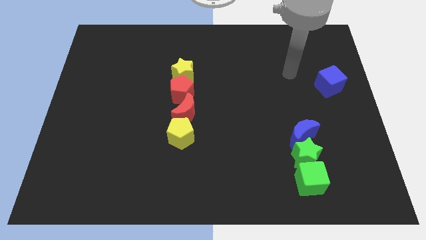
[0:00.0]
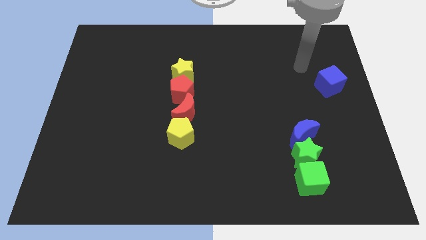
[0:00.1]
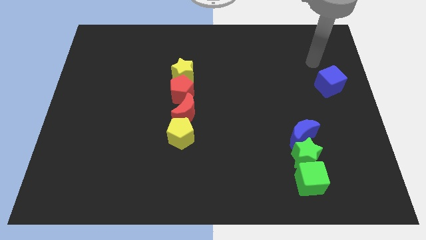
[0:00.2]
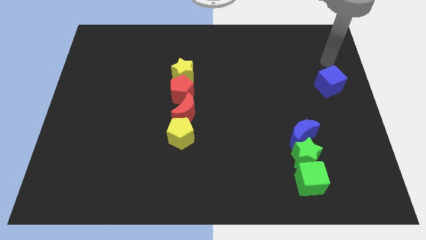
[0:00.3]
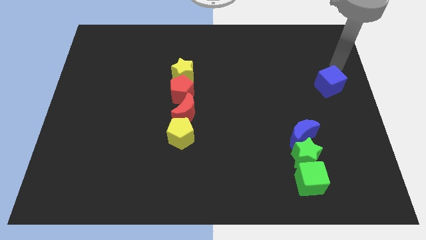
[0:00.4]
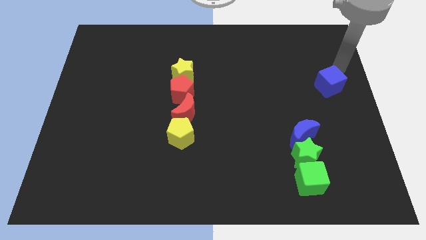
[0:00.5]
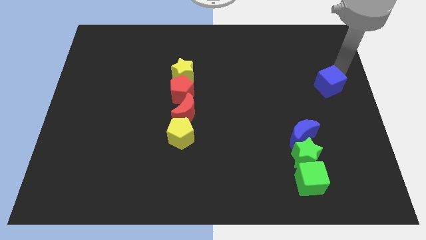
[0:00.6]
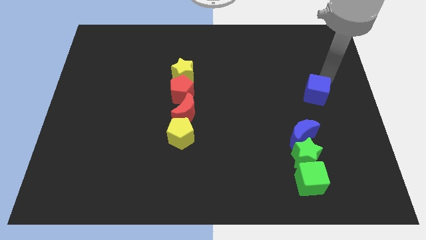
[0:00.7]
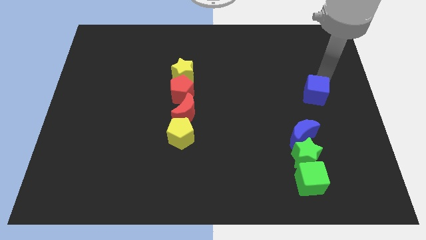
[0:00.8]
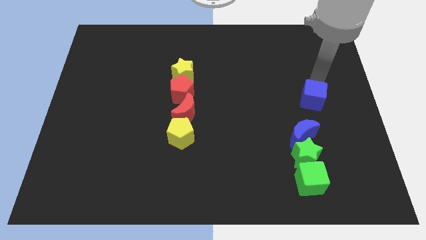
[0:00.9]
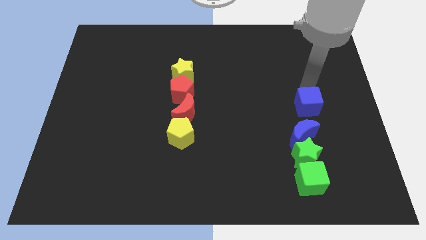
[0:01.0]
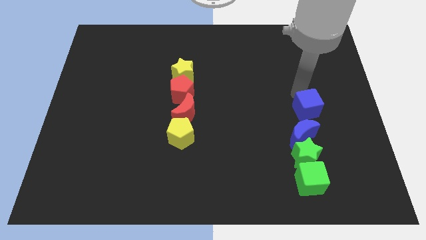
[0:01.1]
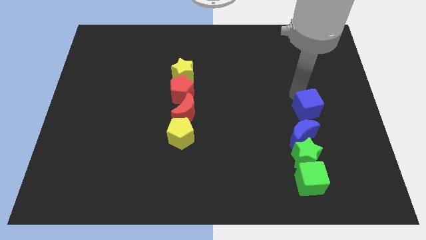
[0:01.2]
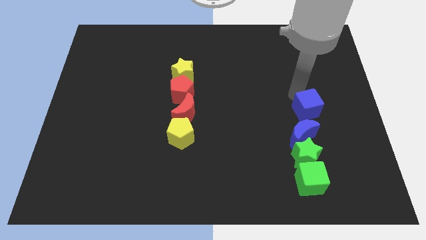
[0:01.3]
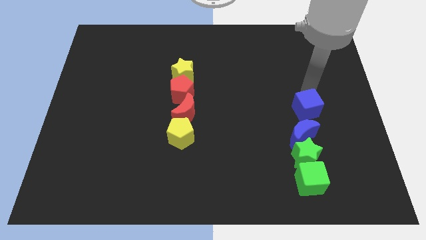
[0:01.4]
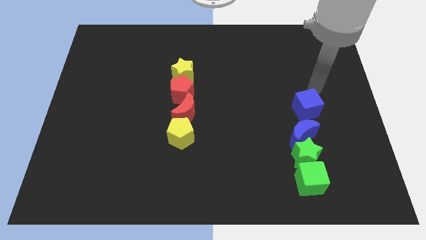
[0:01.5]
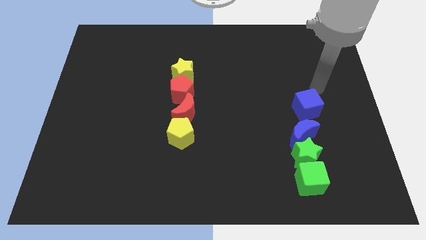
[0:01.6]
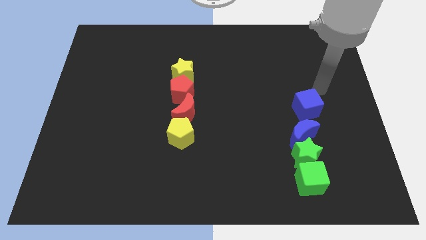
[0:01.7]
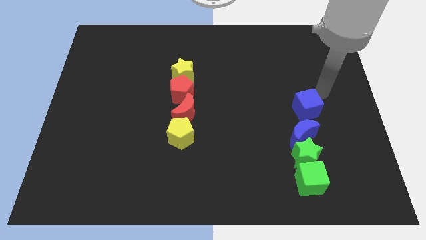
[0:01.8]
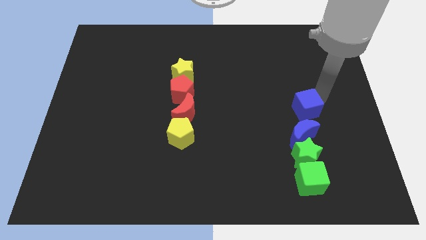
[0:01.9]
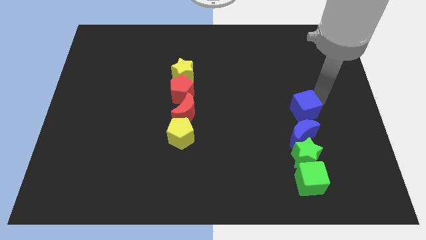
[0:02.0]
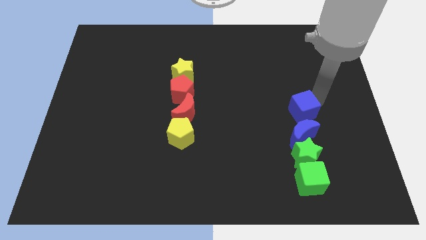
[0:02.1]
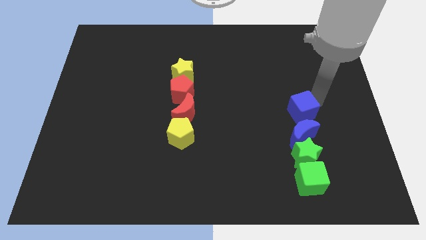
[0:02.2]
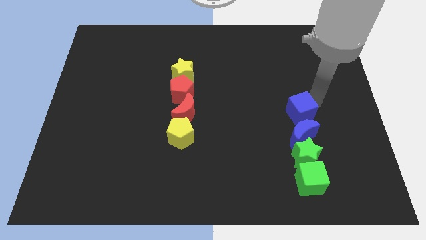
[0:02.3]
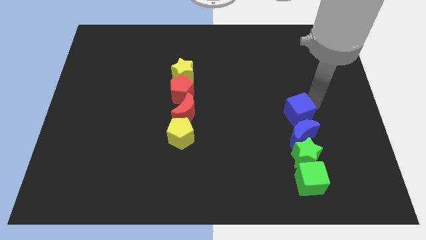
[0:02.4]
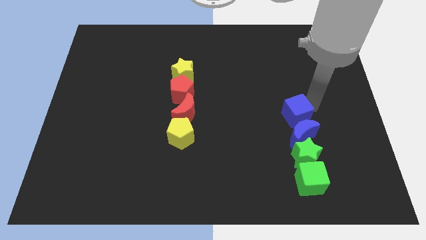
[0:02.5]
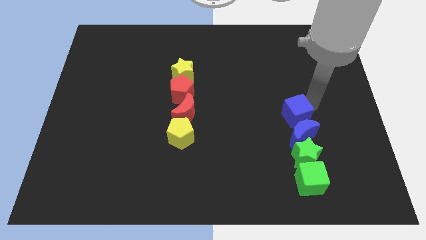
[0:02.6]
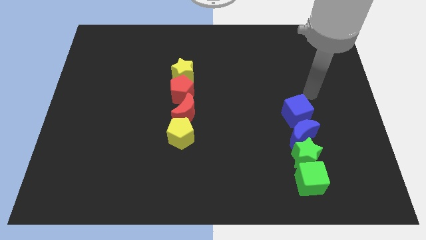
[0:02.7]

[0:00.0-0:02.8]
place the blue cube above to the blue crescent

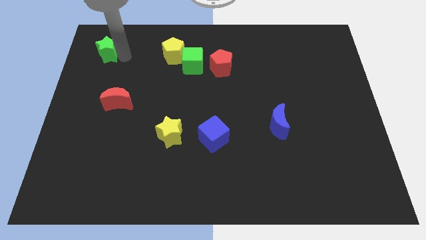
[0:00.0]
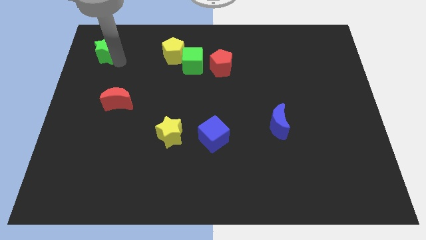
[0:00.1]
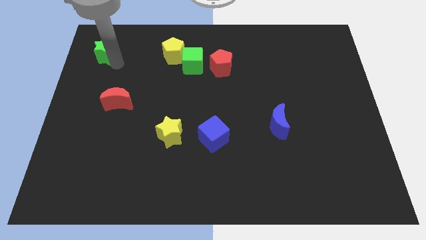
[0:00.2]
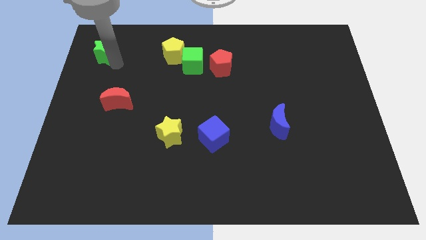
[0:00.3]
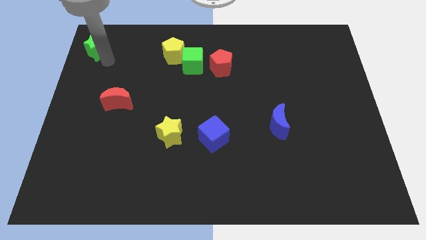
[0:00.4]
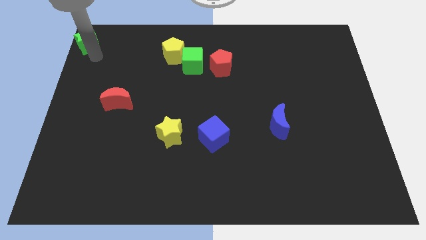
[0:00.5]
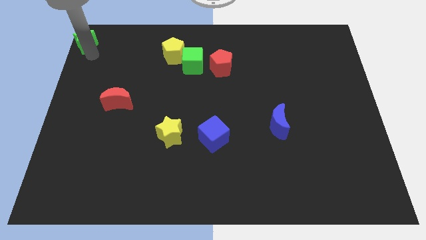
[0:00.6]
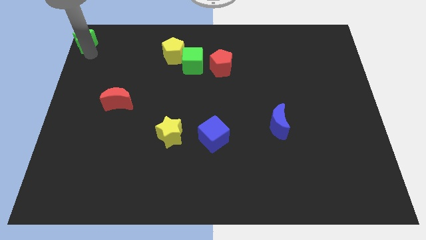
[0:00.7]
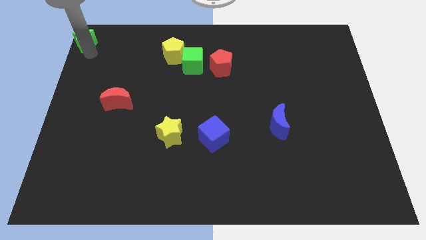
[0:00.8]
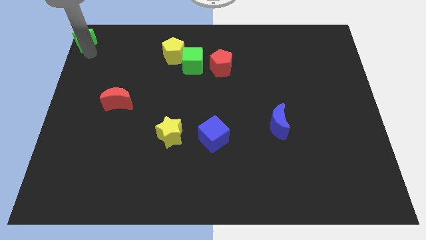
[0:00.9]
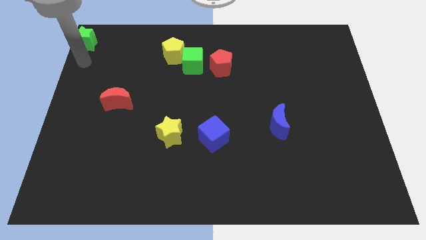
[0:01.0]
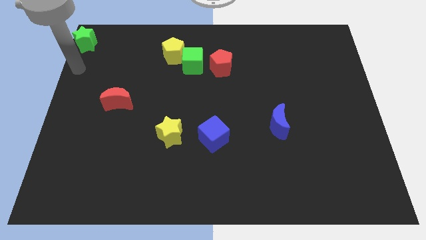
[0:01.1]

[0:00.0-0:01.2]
slide green star at the top left

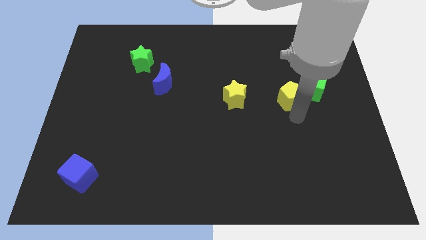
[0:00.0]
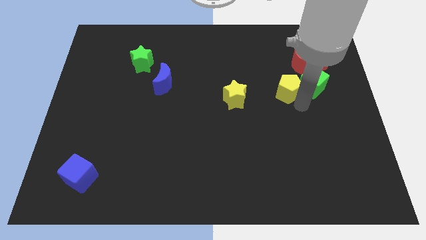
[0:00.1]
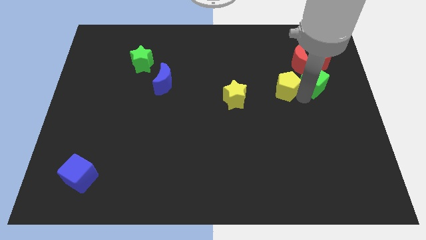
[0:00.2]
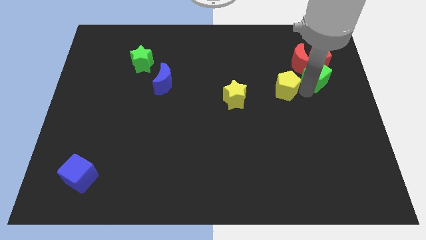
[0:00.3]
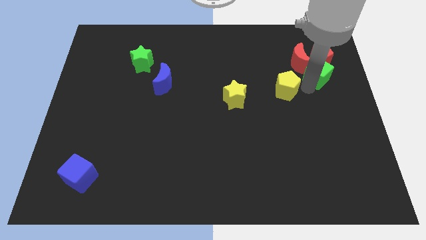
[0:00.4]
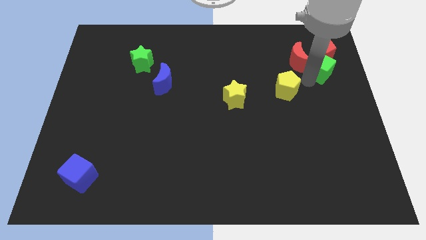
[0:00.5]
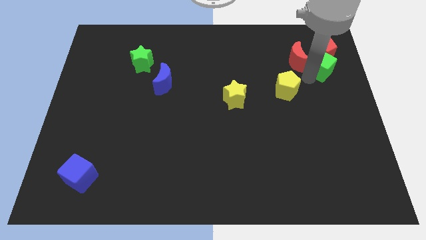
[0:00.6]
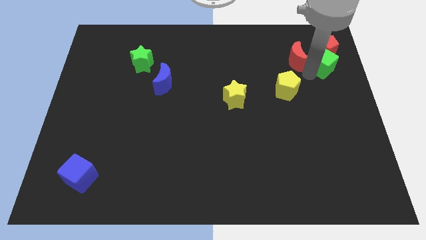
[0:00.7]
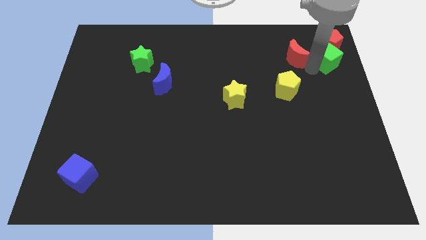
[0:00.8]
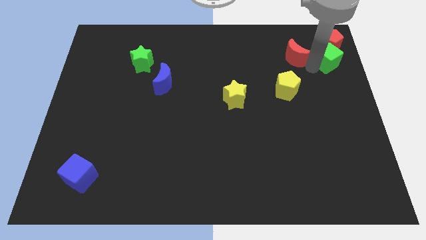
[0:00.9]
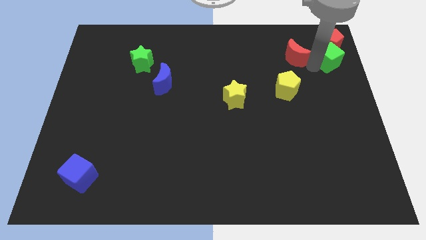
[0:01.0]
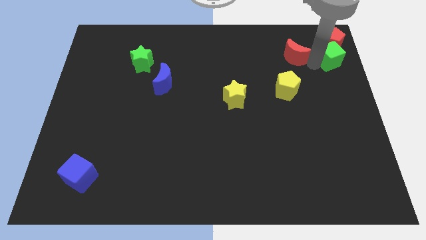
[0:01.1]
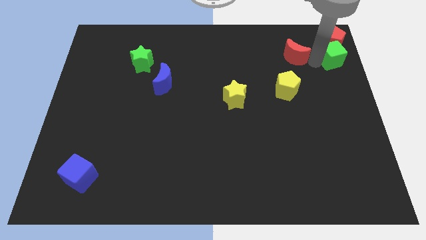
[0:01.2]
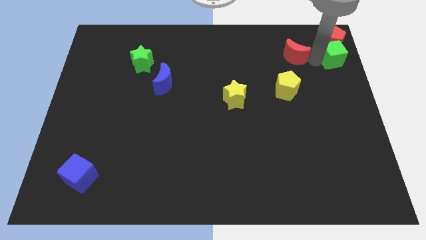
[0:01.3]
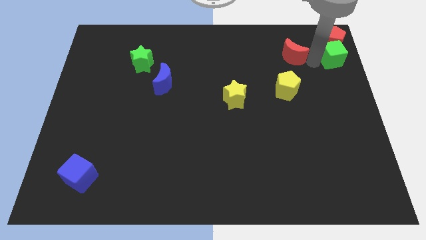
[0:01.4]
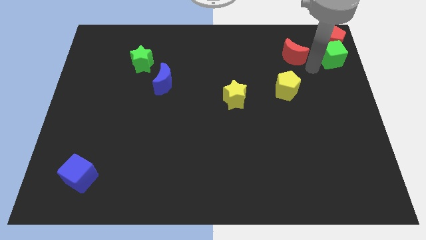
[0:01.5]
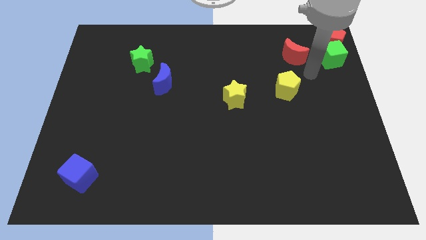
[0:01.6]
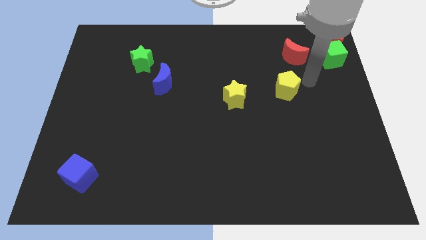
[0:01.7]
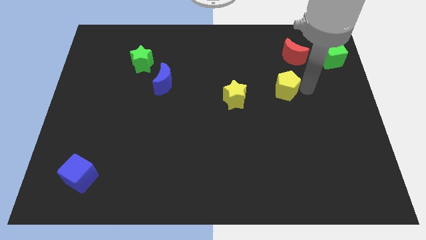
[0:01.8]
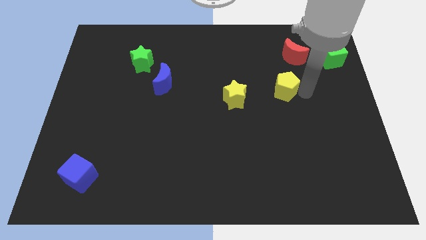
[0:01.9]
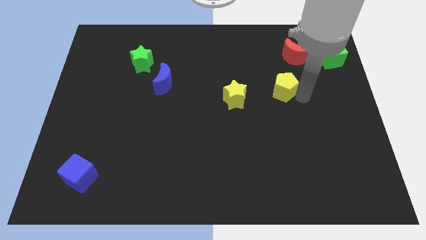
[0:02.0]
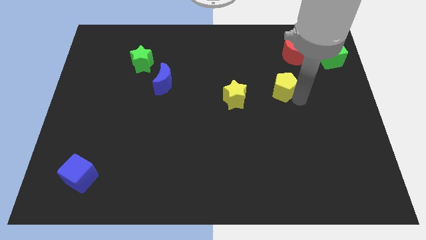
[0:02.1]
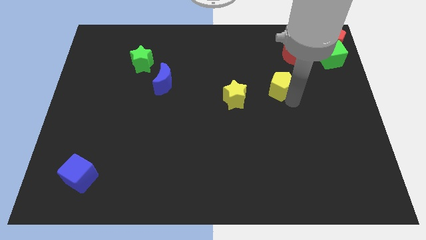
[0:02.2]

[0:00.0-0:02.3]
move green cube and red pentagon towards top right

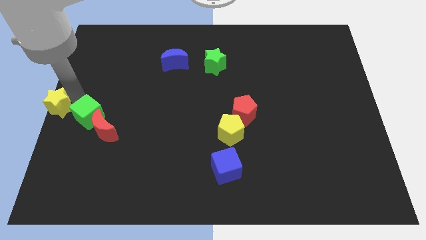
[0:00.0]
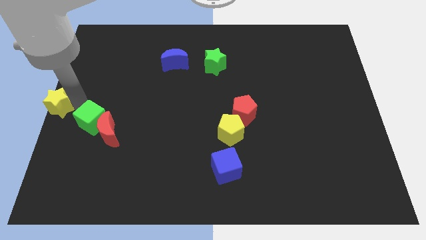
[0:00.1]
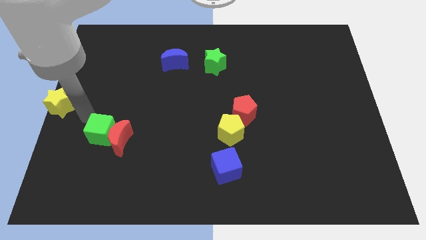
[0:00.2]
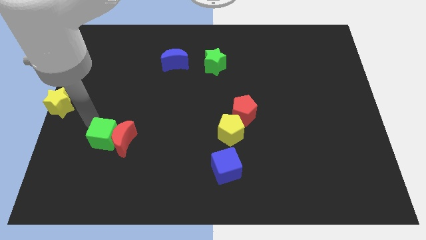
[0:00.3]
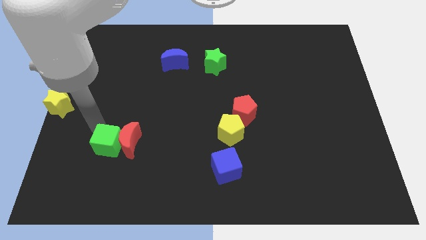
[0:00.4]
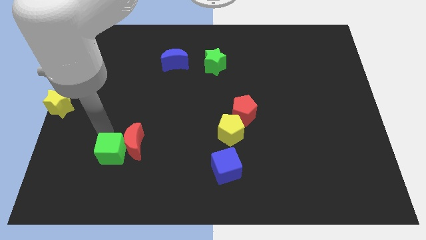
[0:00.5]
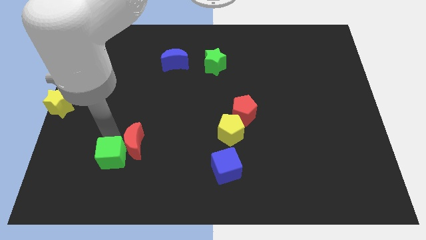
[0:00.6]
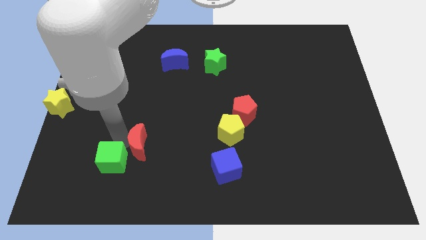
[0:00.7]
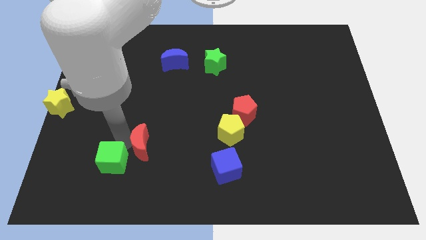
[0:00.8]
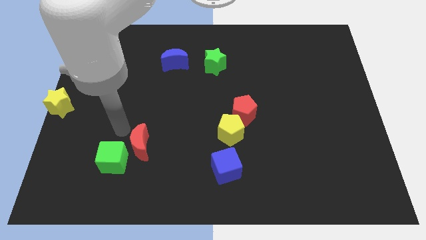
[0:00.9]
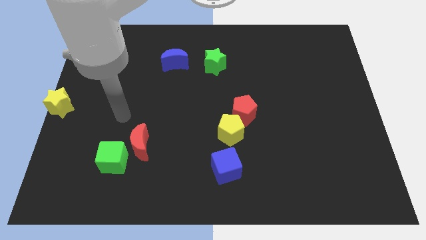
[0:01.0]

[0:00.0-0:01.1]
separate green cube and red crescent

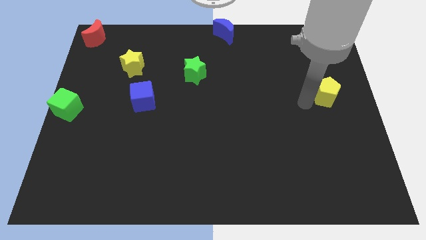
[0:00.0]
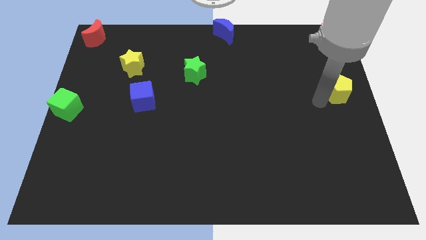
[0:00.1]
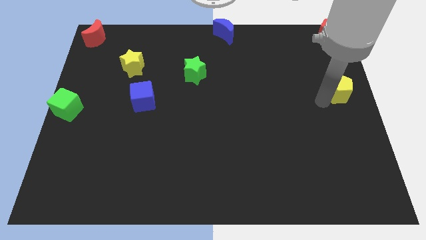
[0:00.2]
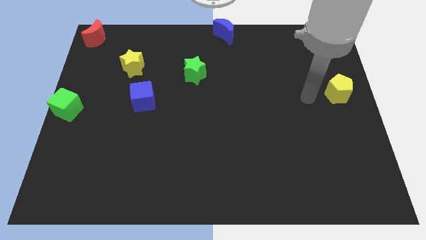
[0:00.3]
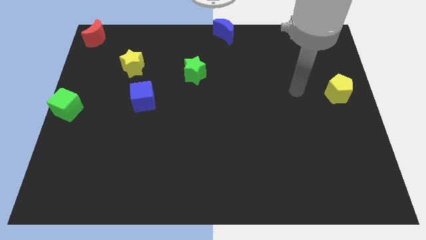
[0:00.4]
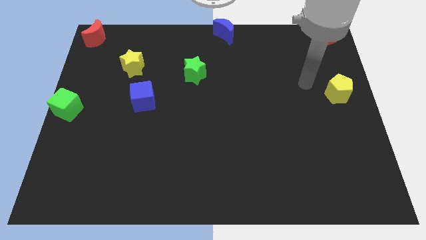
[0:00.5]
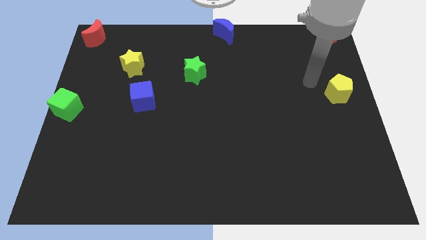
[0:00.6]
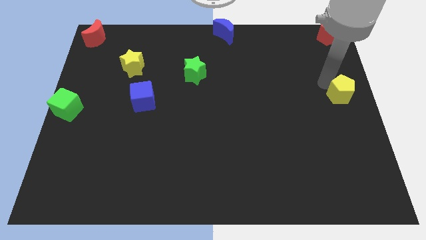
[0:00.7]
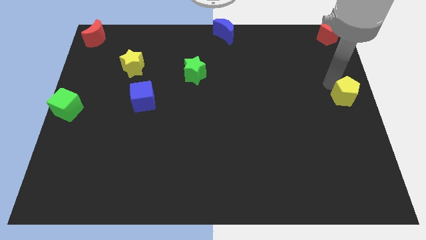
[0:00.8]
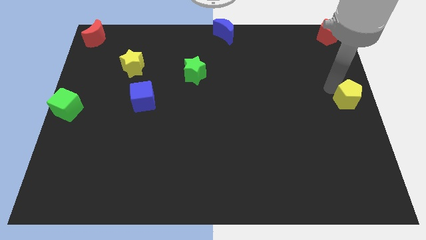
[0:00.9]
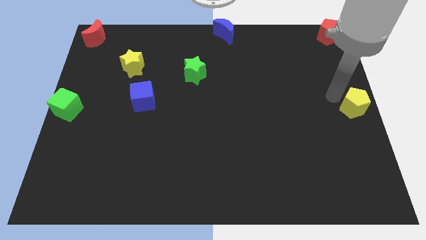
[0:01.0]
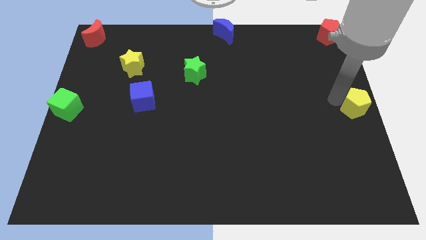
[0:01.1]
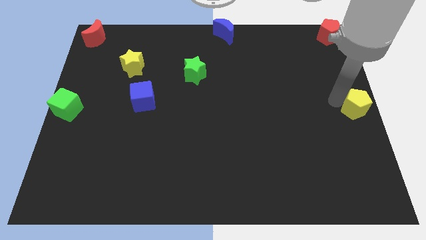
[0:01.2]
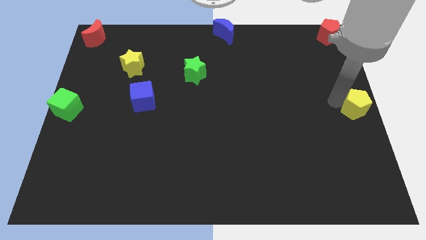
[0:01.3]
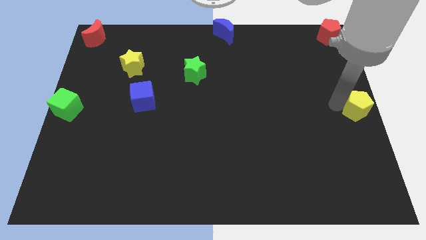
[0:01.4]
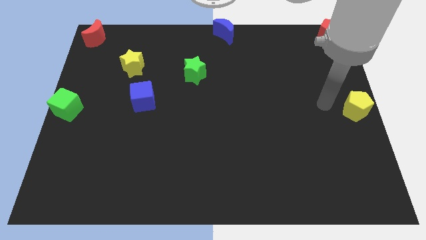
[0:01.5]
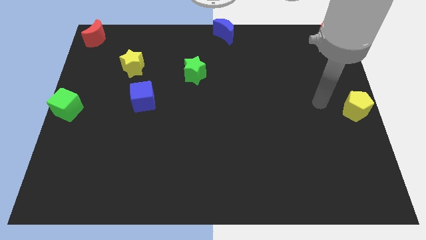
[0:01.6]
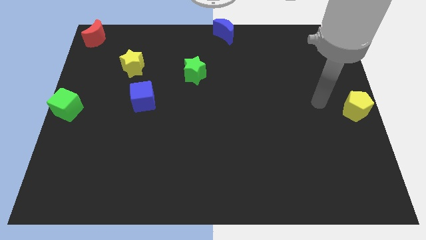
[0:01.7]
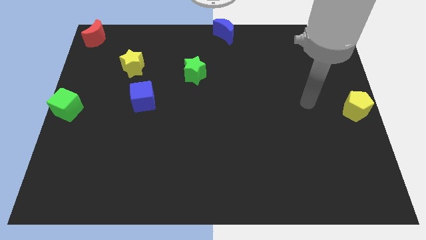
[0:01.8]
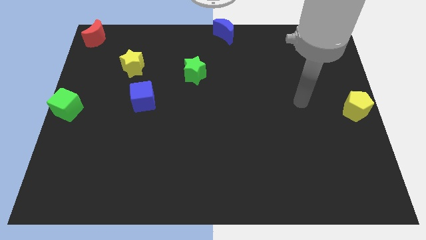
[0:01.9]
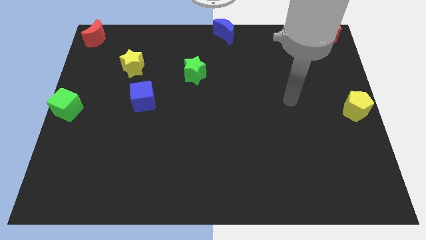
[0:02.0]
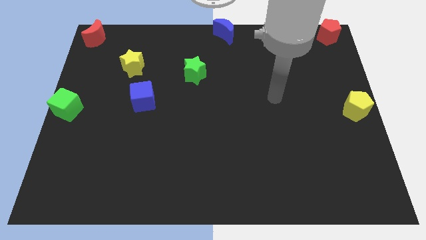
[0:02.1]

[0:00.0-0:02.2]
place the yellow pentagon at the center right of the board
